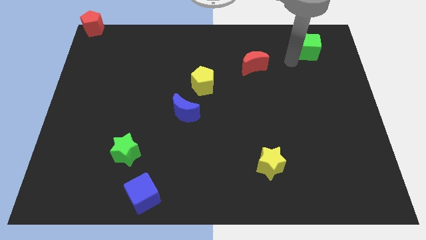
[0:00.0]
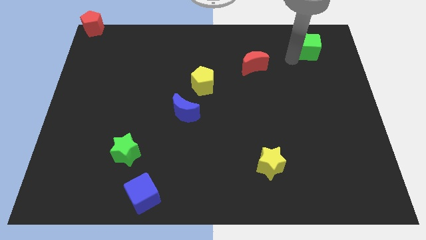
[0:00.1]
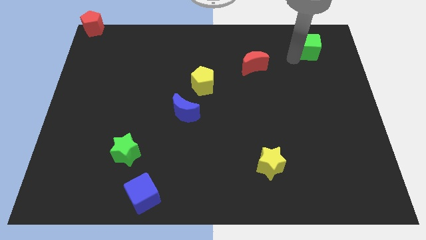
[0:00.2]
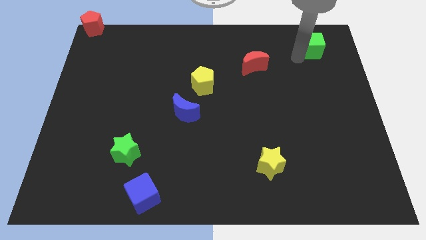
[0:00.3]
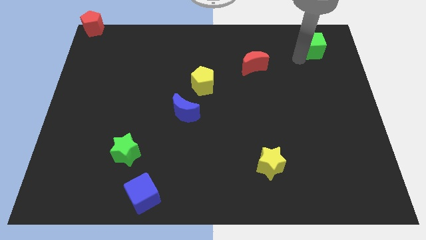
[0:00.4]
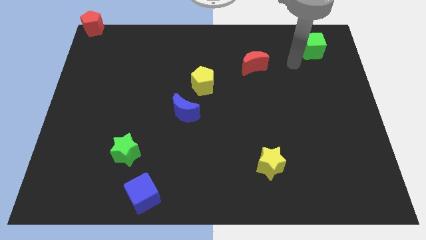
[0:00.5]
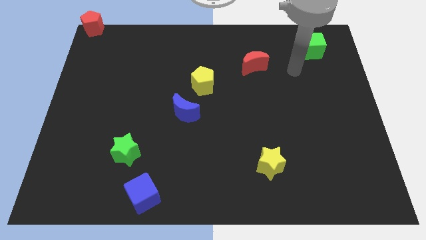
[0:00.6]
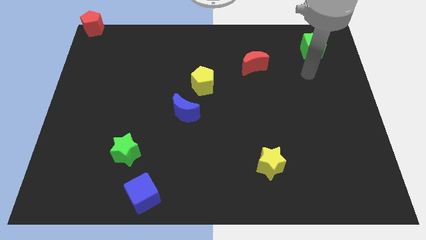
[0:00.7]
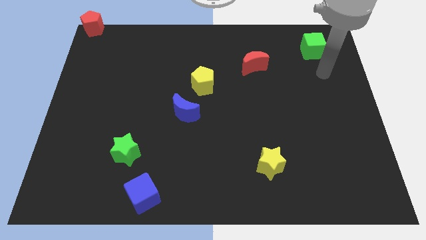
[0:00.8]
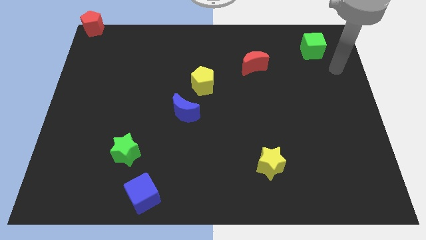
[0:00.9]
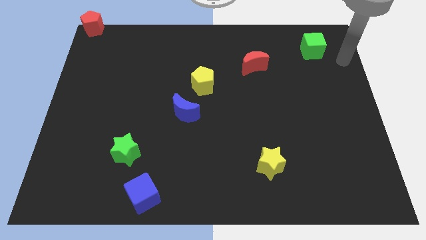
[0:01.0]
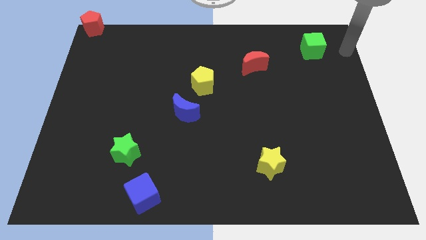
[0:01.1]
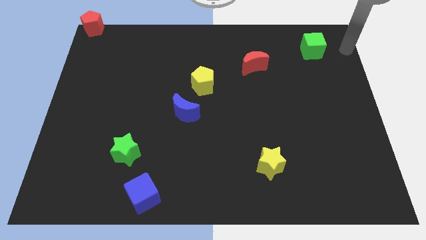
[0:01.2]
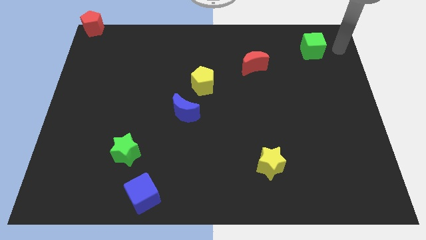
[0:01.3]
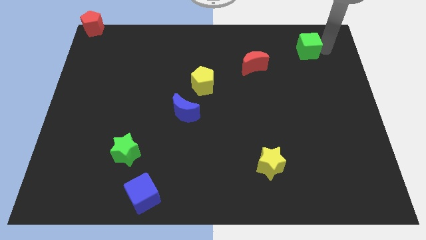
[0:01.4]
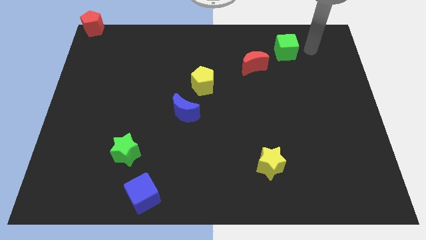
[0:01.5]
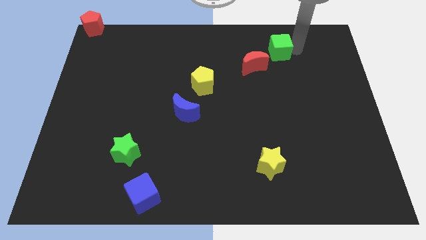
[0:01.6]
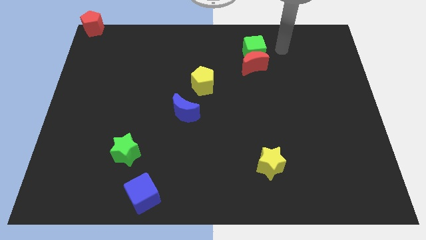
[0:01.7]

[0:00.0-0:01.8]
place the green cube above the red moon

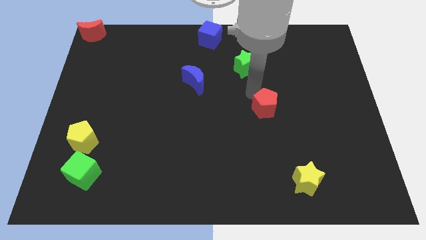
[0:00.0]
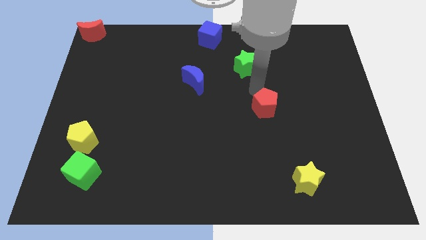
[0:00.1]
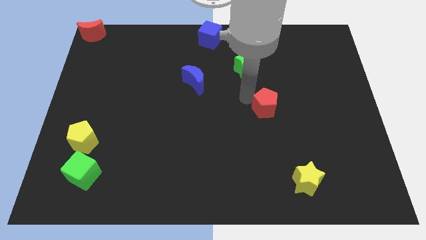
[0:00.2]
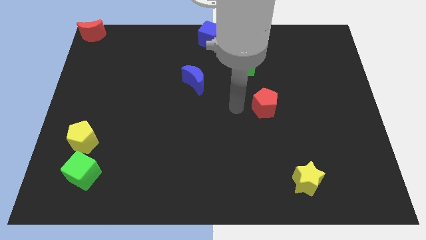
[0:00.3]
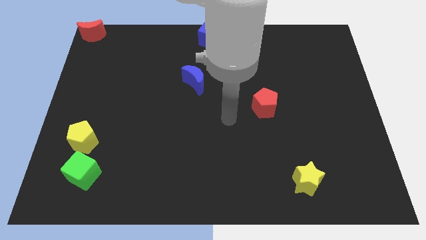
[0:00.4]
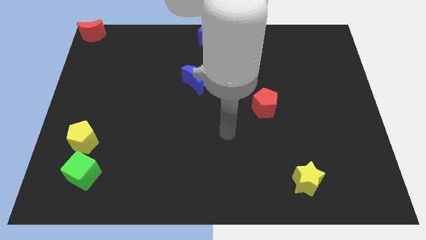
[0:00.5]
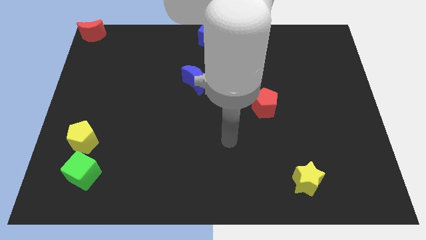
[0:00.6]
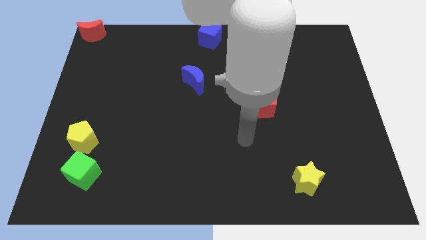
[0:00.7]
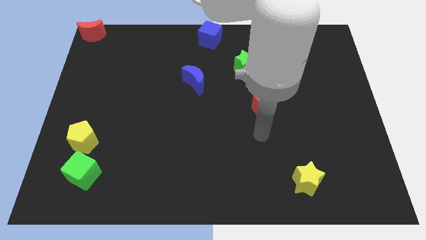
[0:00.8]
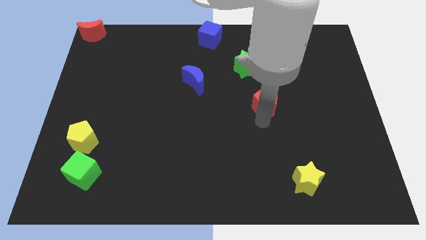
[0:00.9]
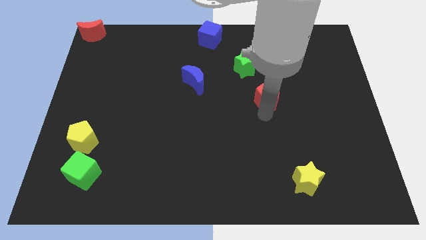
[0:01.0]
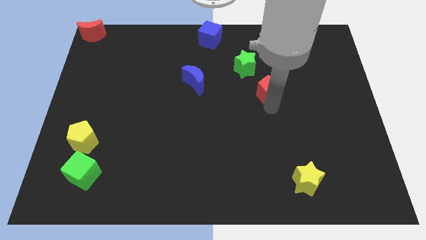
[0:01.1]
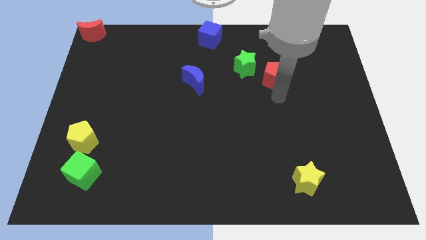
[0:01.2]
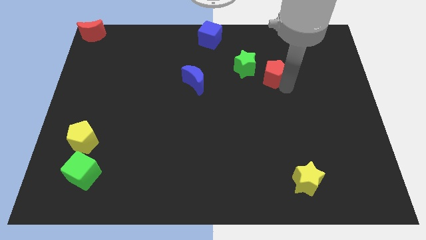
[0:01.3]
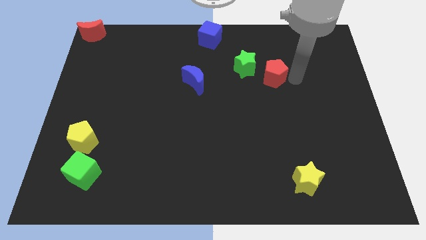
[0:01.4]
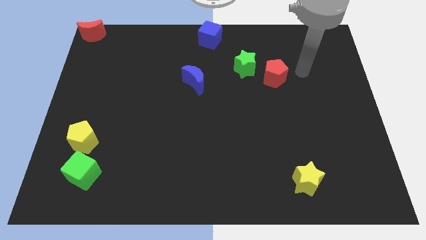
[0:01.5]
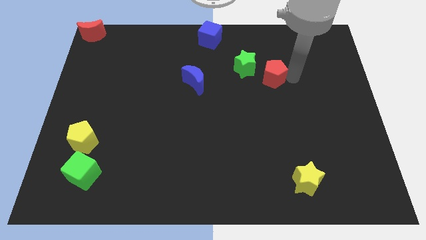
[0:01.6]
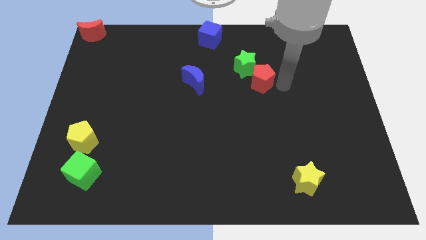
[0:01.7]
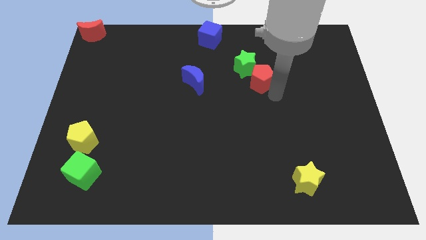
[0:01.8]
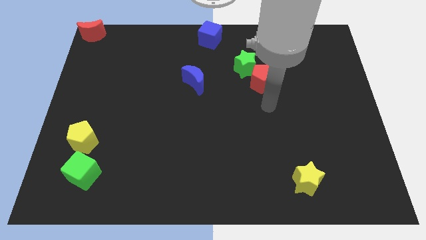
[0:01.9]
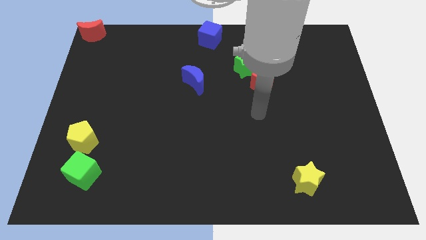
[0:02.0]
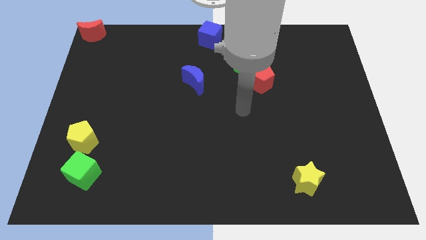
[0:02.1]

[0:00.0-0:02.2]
push the red pentagon towards the green star

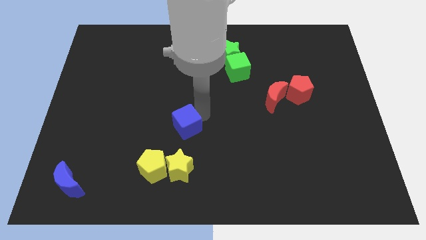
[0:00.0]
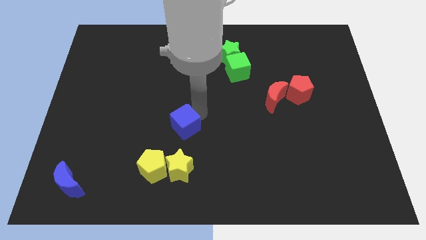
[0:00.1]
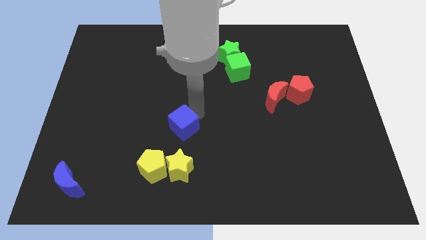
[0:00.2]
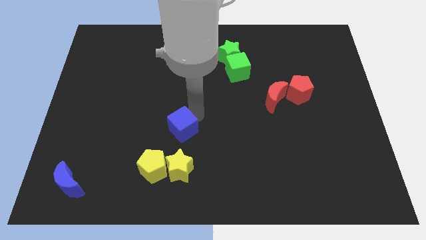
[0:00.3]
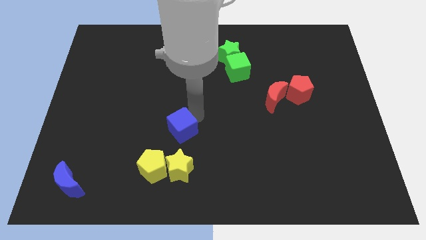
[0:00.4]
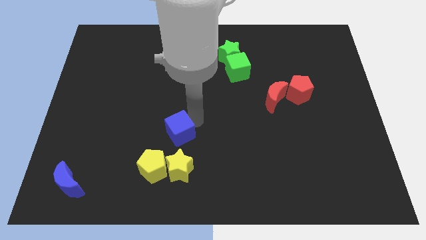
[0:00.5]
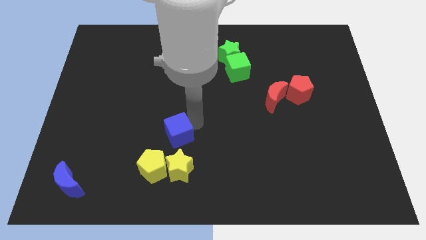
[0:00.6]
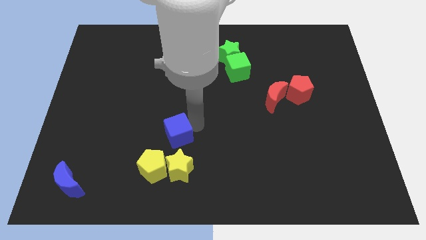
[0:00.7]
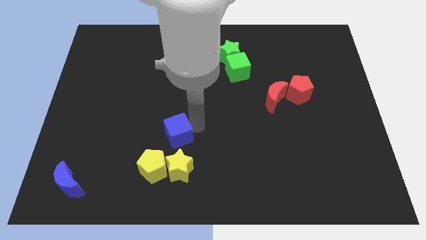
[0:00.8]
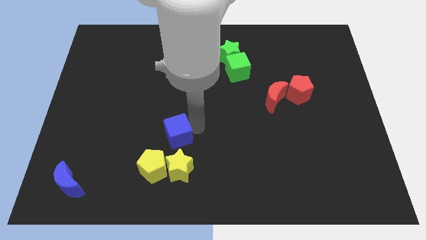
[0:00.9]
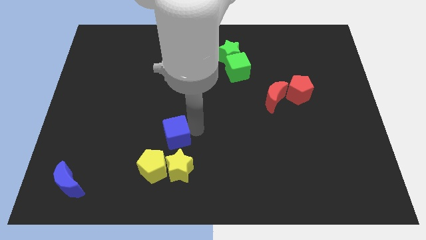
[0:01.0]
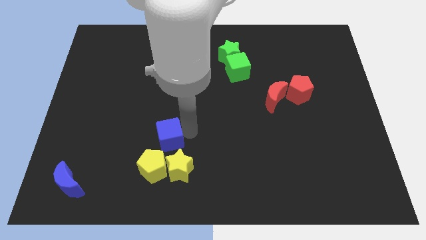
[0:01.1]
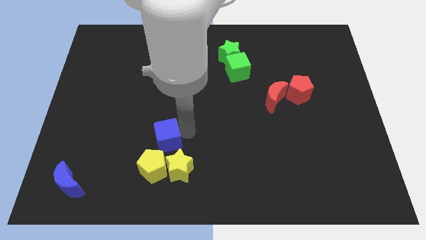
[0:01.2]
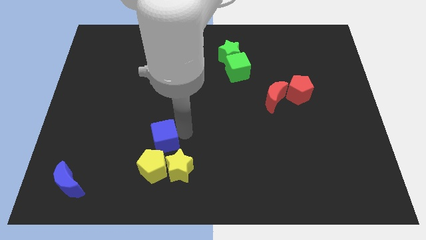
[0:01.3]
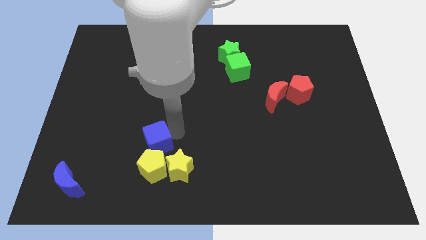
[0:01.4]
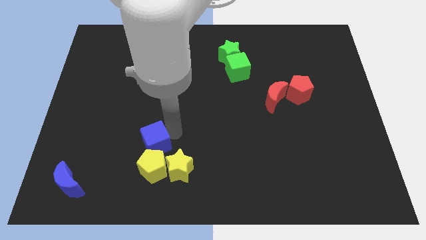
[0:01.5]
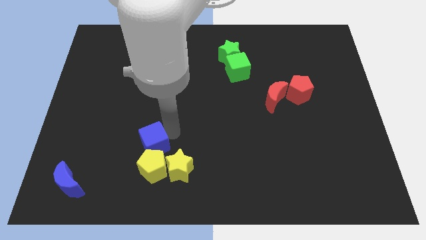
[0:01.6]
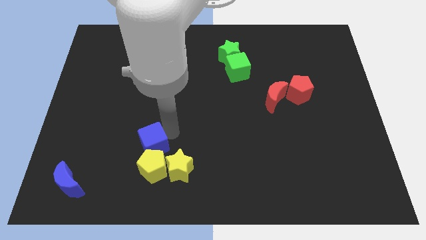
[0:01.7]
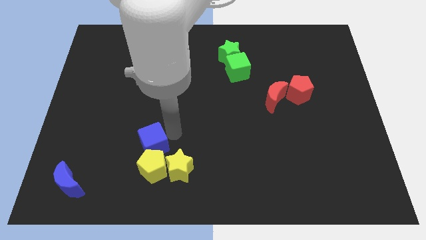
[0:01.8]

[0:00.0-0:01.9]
place the blue cube above the yellow pentagon

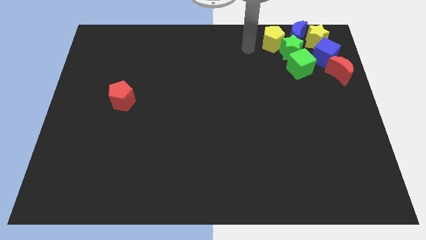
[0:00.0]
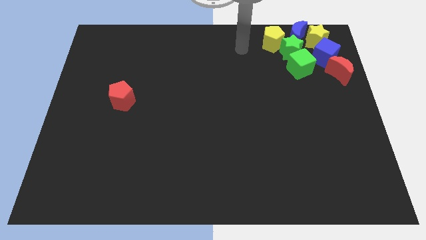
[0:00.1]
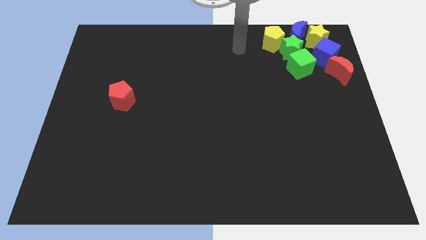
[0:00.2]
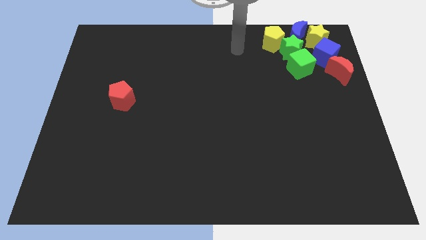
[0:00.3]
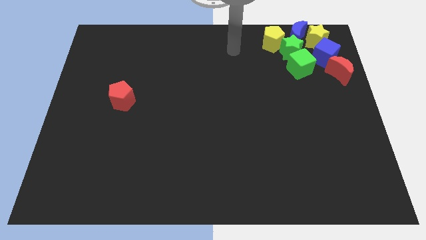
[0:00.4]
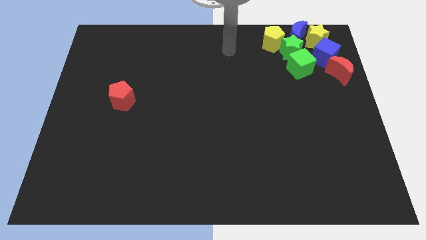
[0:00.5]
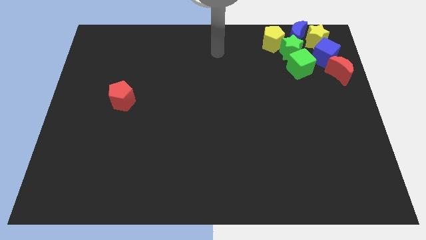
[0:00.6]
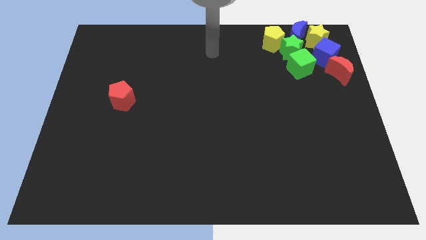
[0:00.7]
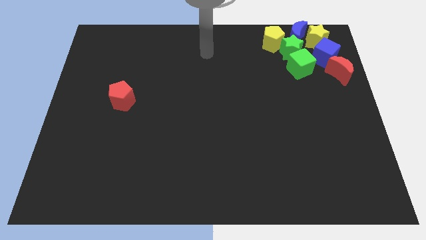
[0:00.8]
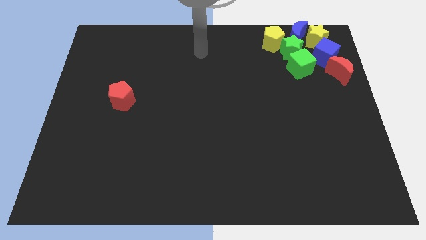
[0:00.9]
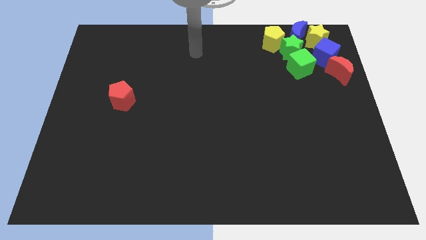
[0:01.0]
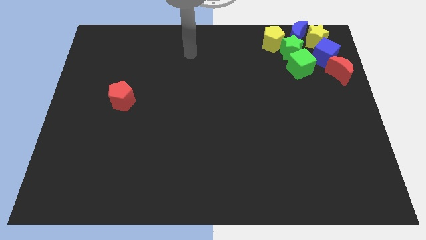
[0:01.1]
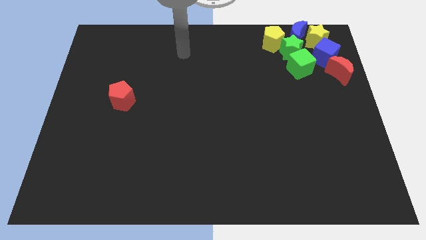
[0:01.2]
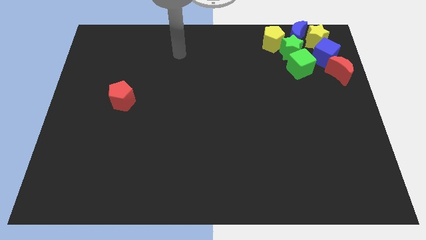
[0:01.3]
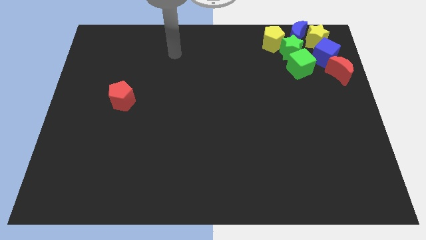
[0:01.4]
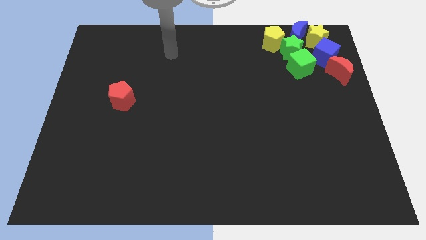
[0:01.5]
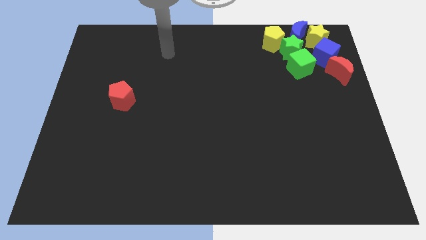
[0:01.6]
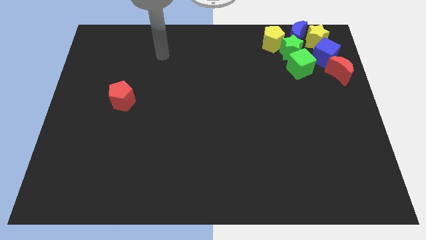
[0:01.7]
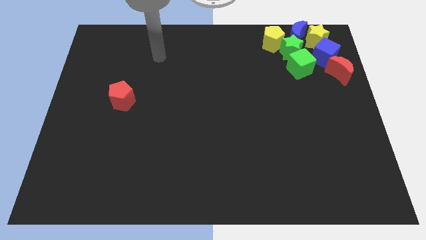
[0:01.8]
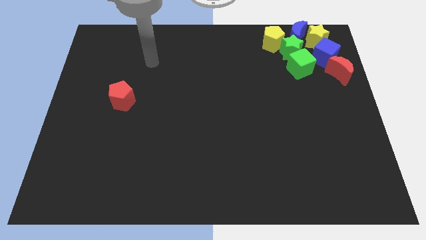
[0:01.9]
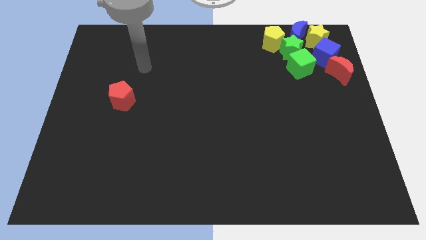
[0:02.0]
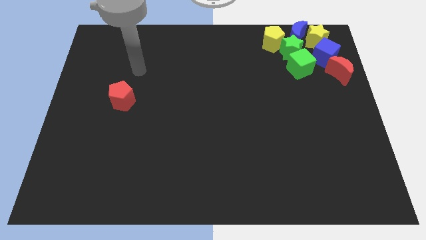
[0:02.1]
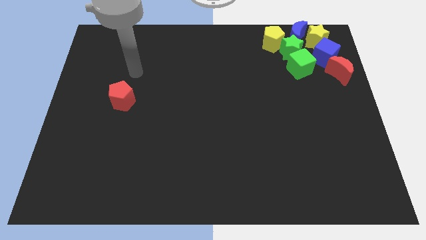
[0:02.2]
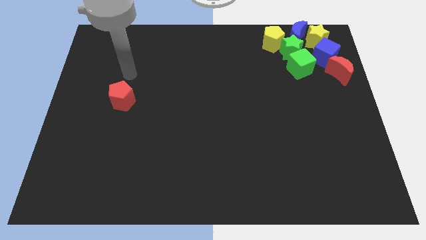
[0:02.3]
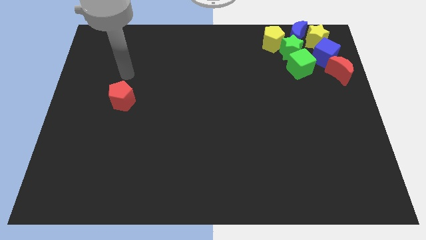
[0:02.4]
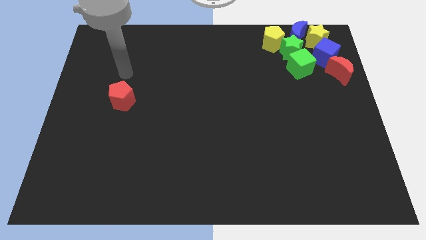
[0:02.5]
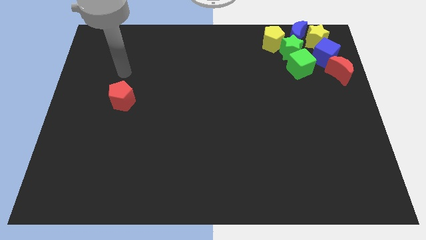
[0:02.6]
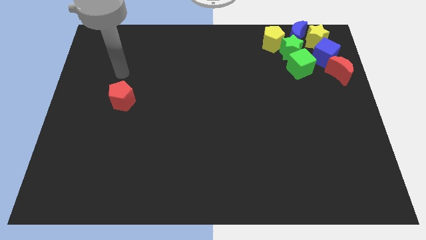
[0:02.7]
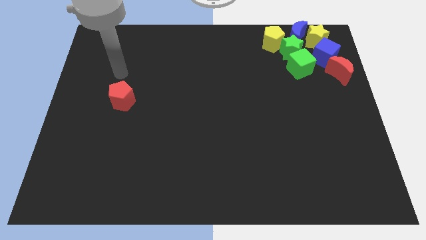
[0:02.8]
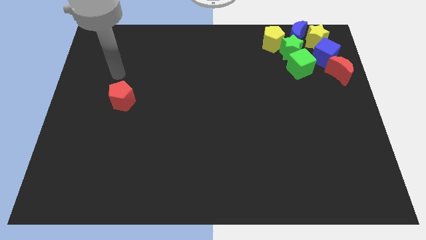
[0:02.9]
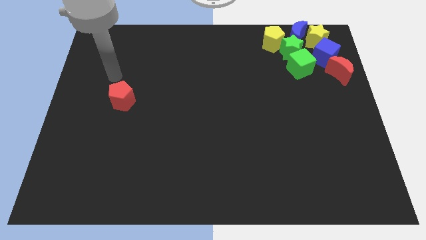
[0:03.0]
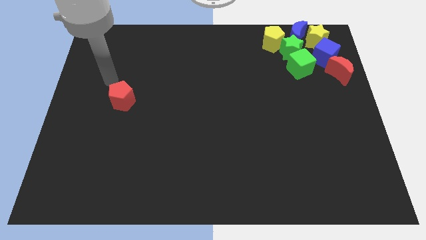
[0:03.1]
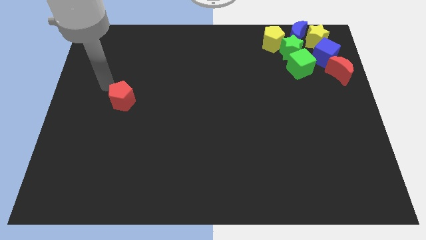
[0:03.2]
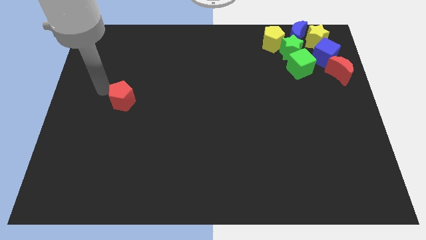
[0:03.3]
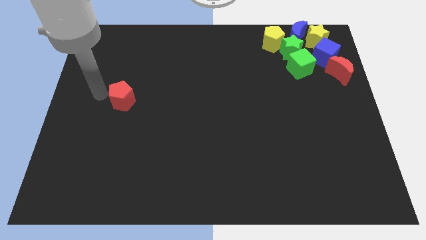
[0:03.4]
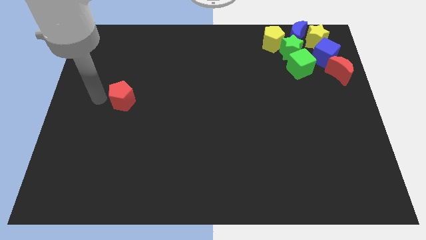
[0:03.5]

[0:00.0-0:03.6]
move your arm beside red pentagon
